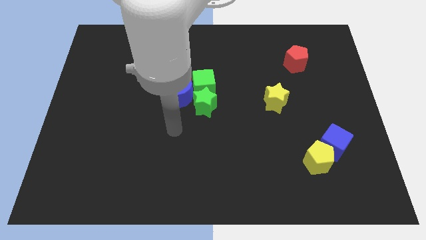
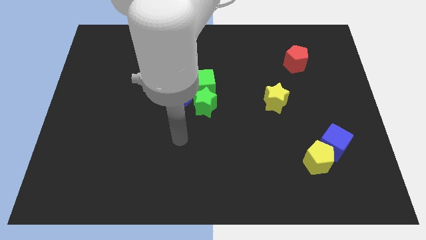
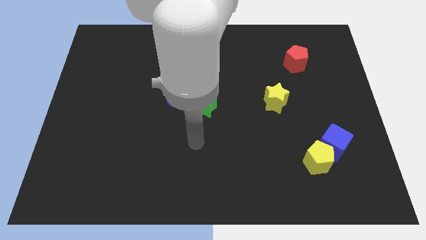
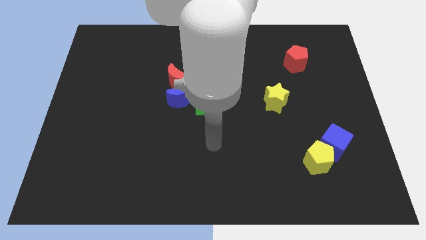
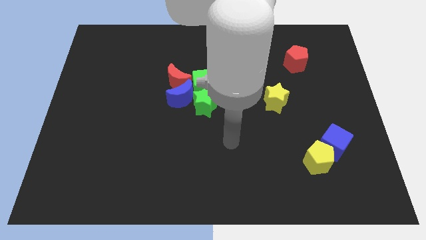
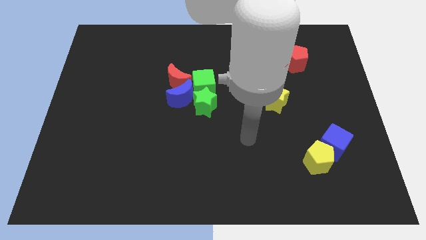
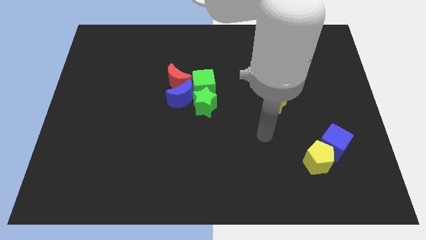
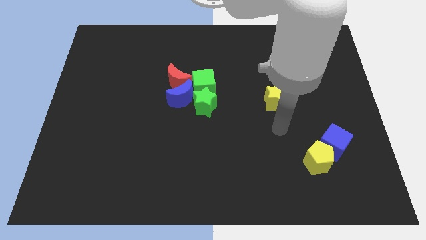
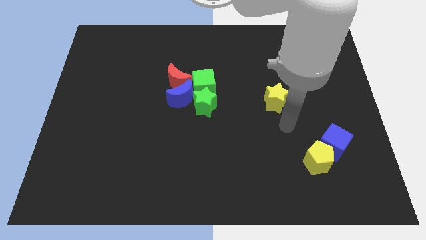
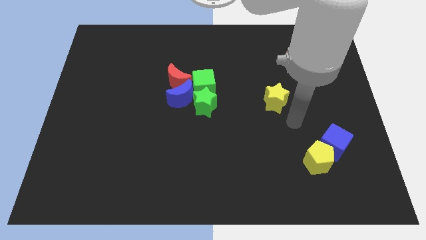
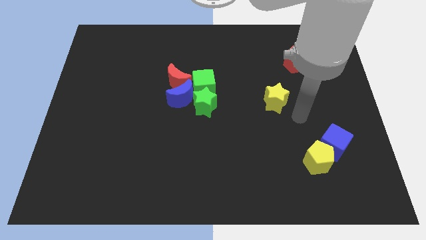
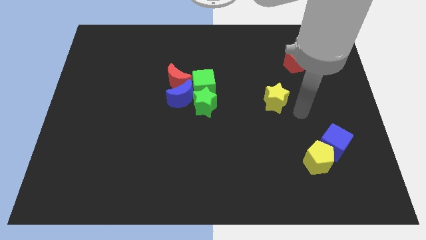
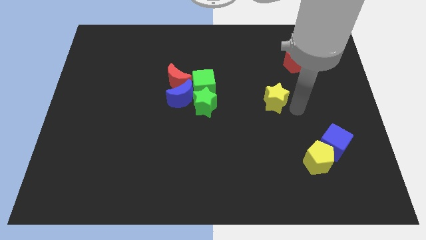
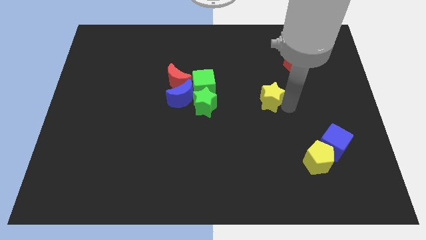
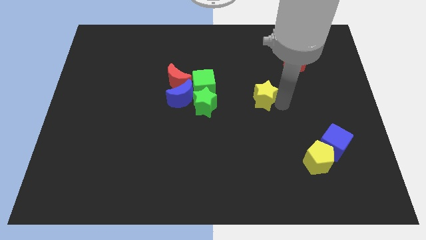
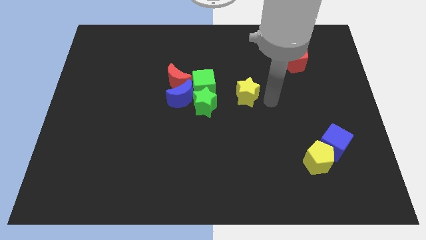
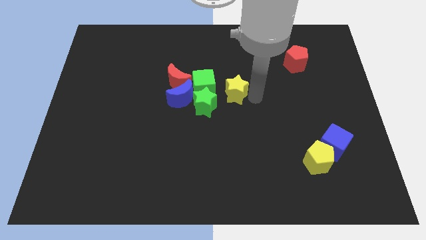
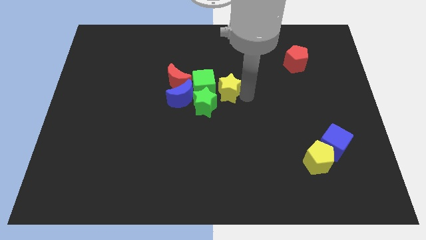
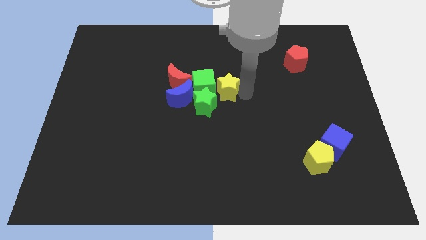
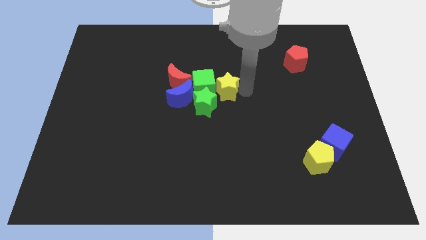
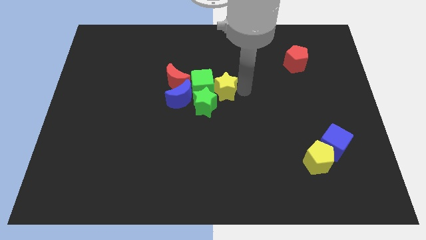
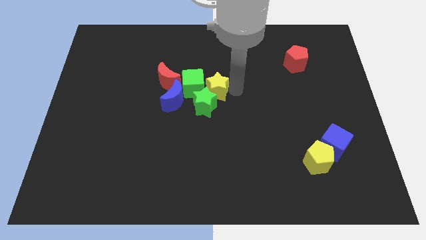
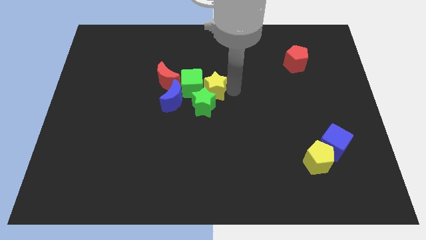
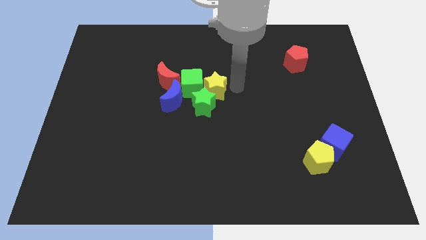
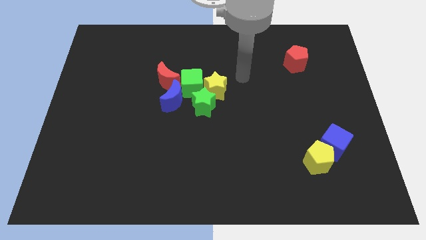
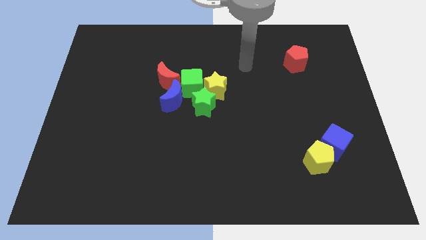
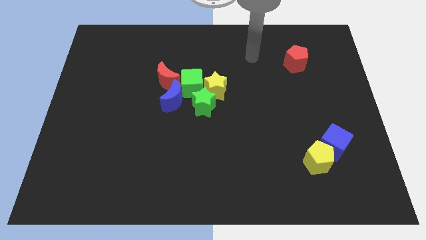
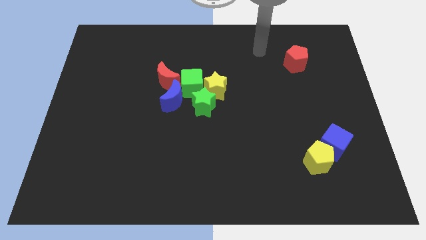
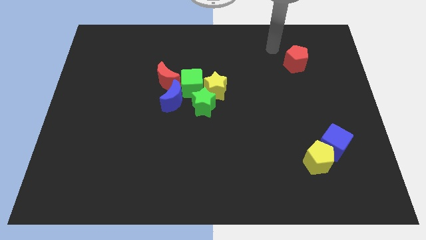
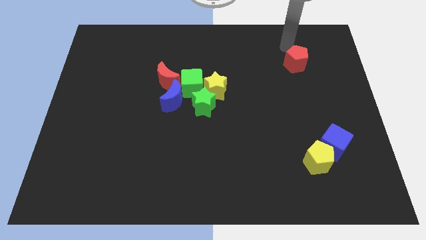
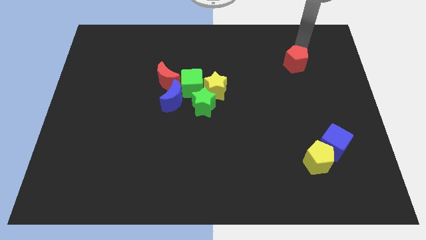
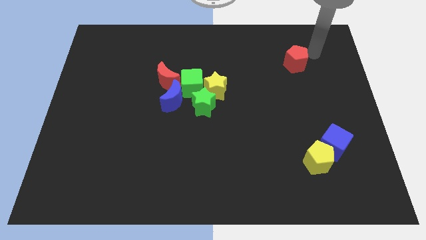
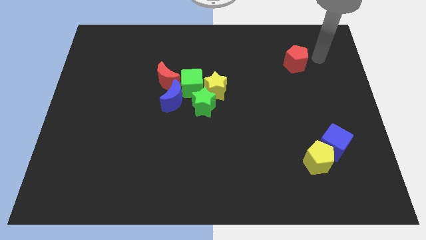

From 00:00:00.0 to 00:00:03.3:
slide the yellow star into the right side of the green cube

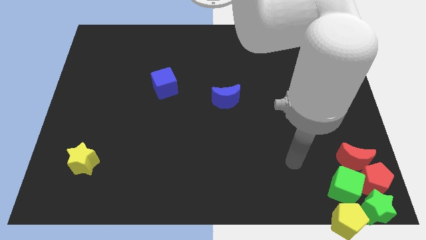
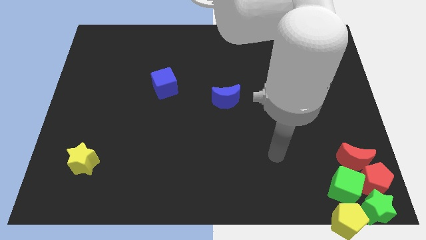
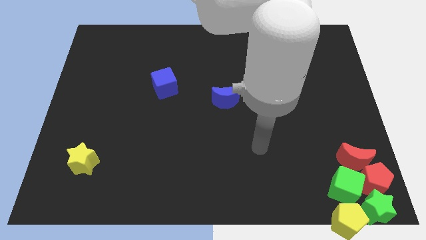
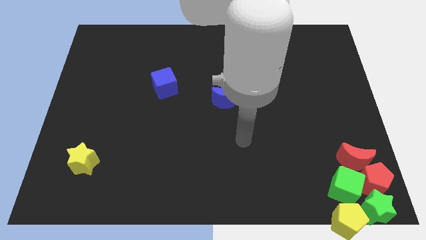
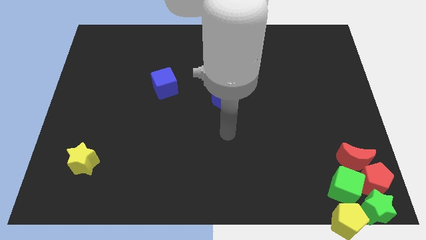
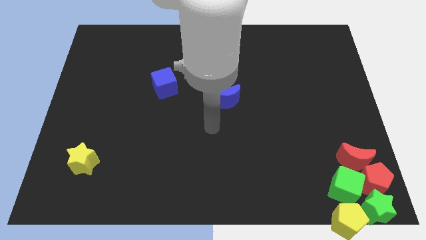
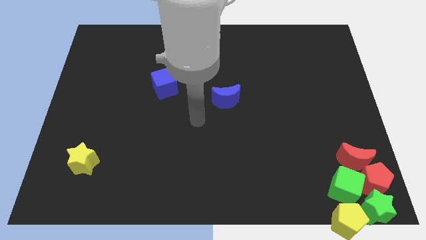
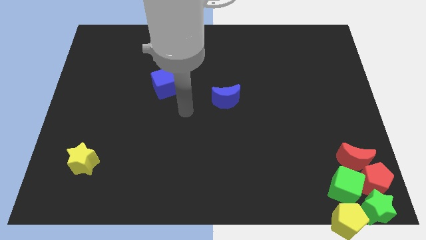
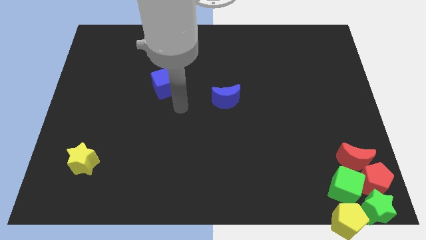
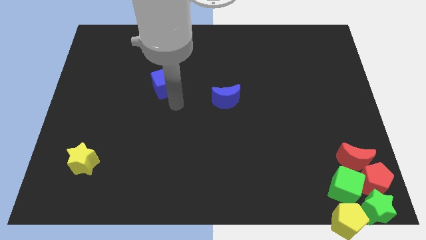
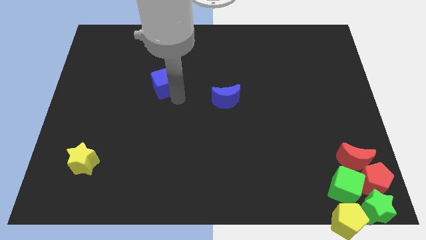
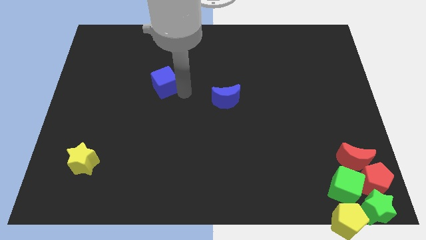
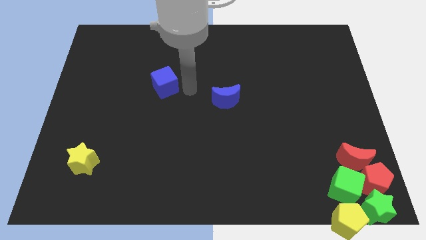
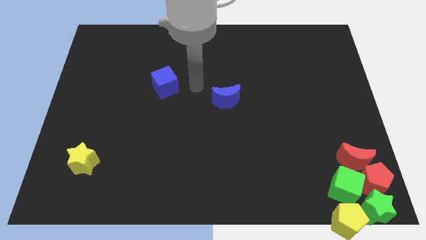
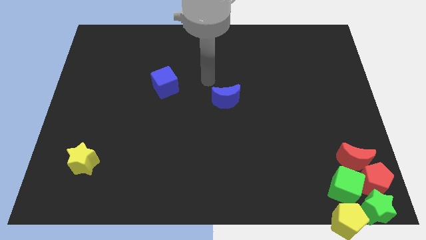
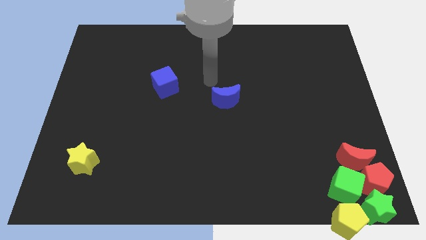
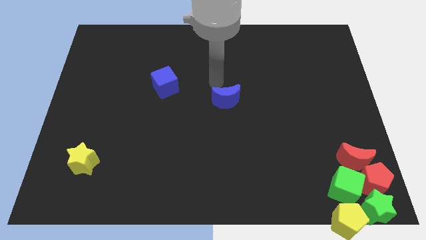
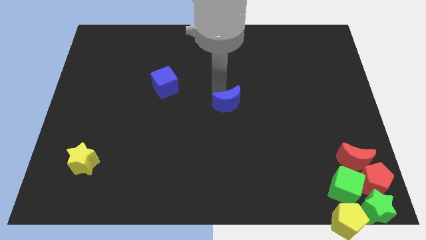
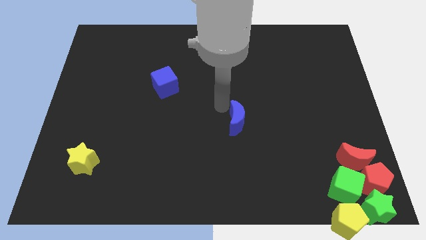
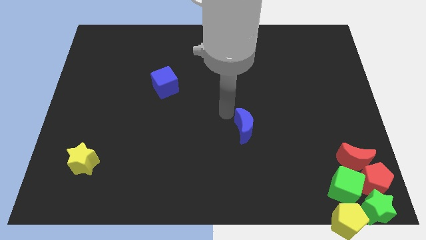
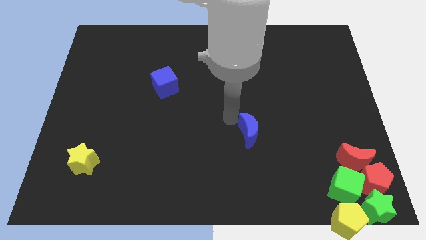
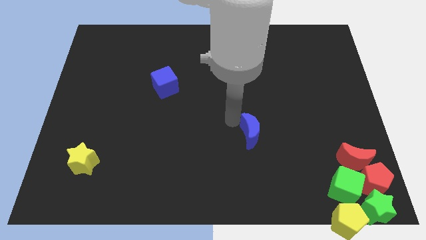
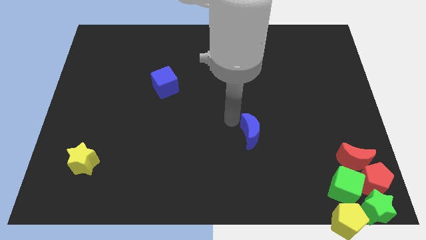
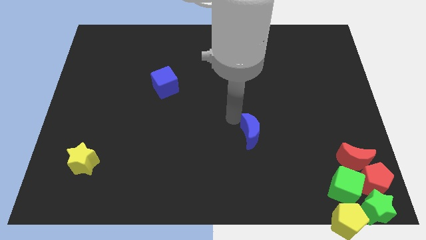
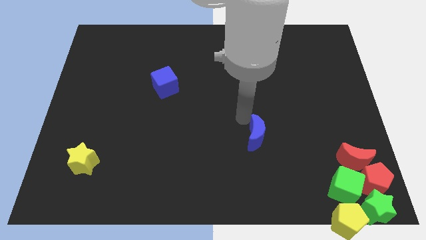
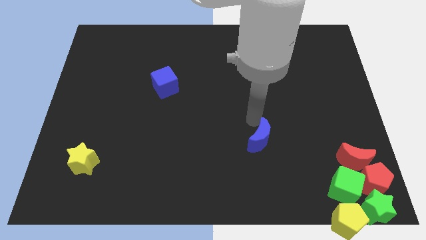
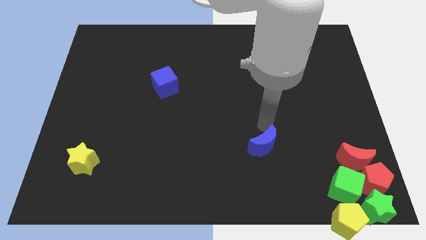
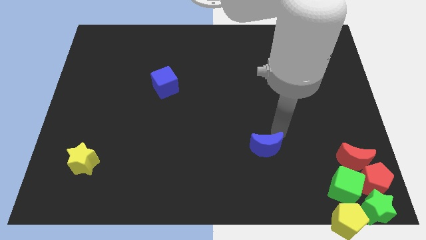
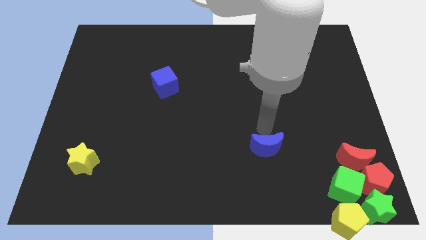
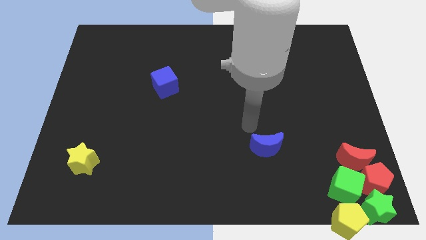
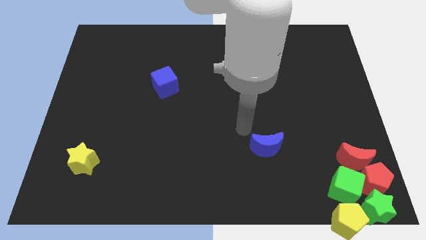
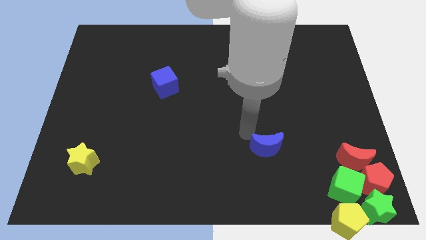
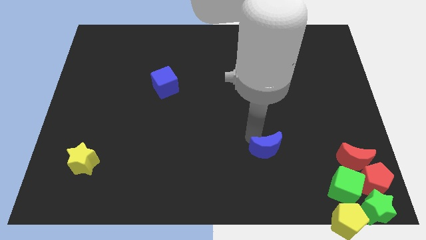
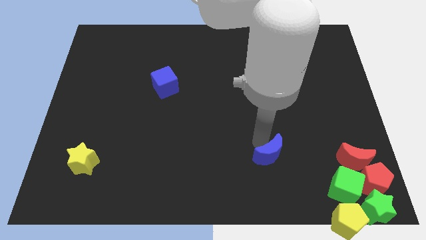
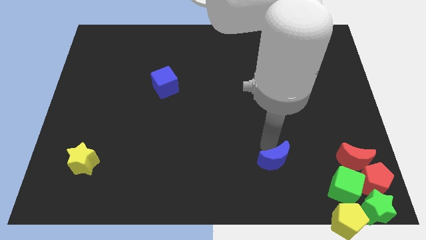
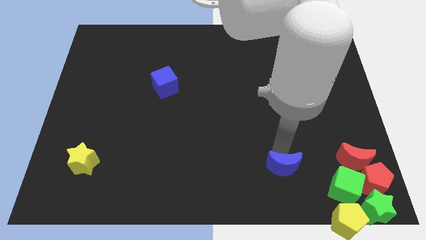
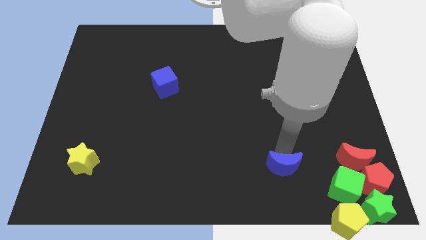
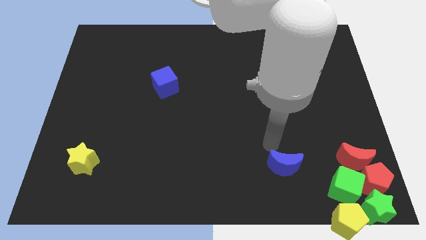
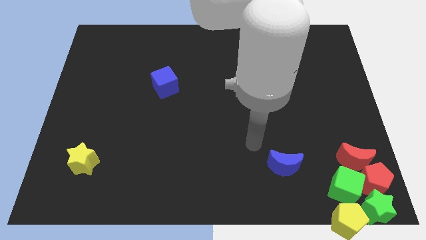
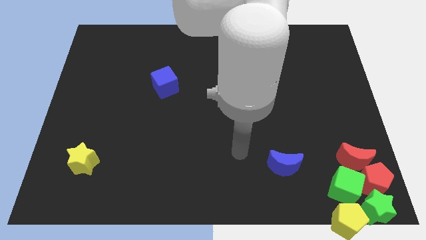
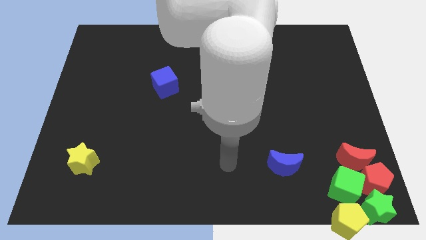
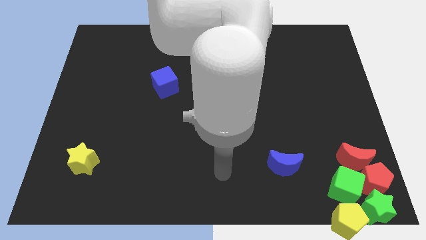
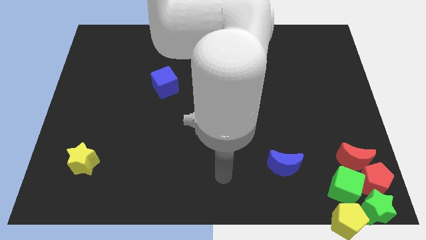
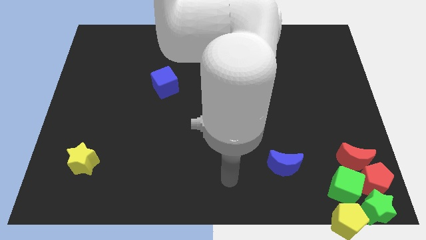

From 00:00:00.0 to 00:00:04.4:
move the blue moon to the left of the red crescent

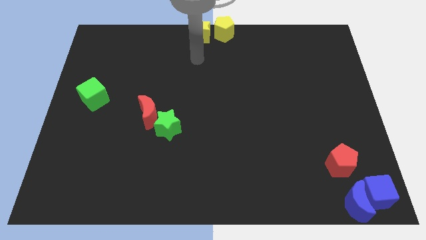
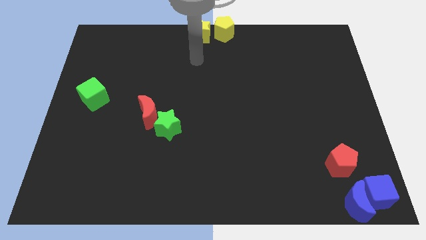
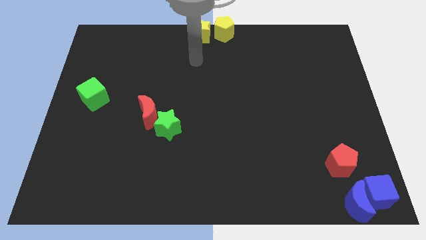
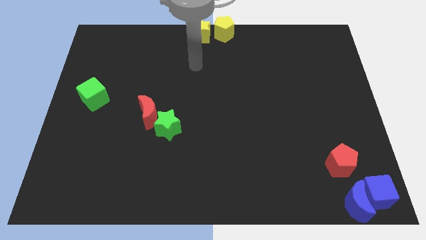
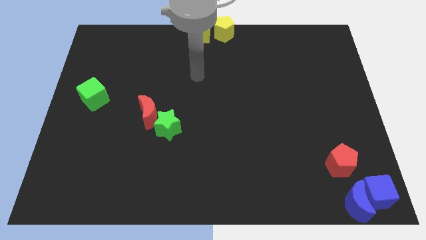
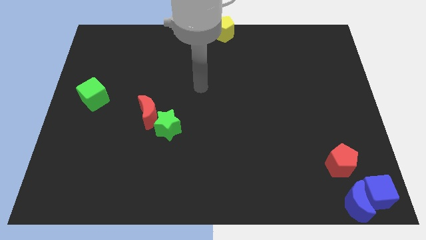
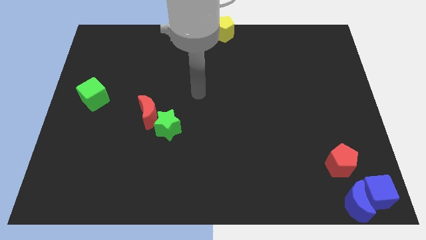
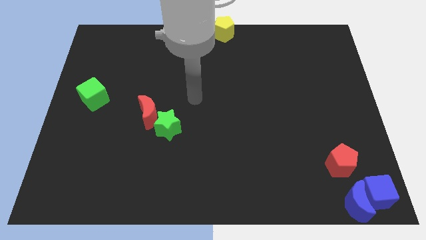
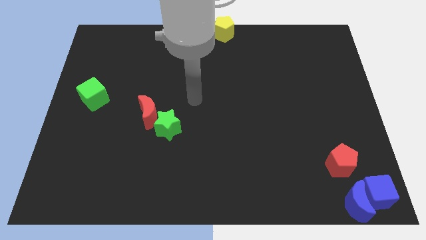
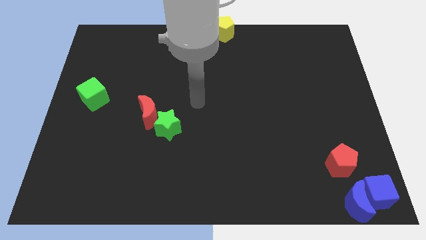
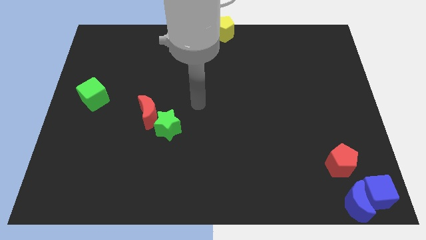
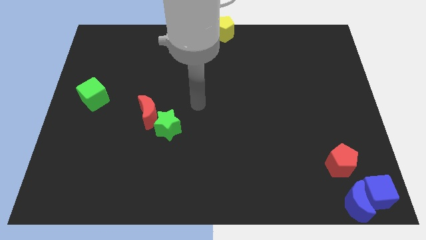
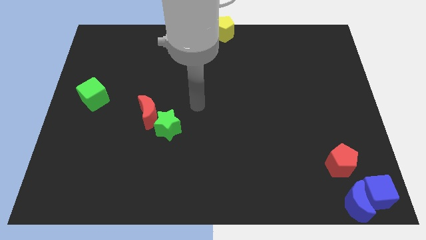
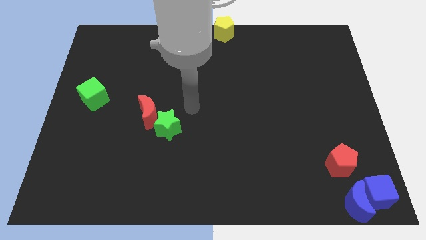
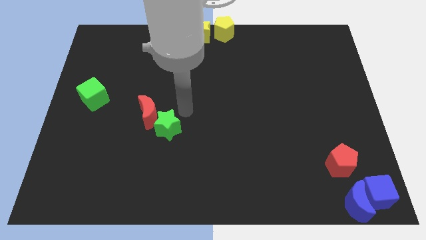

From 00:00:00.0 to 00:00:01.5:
move arm down towards the green star
